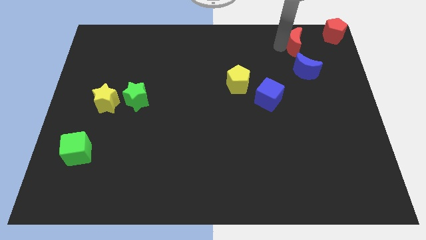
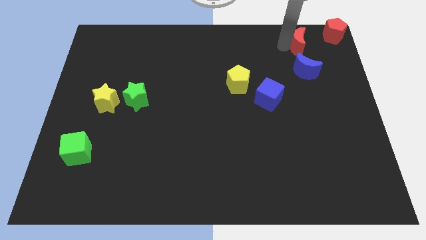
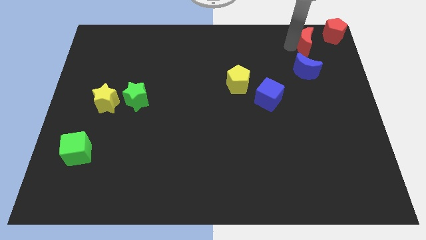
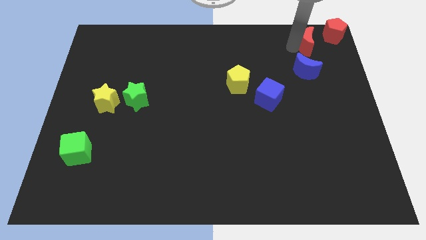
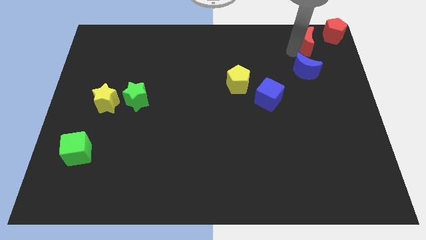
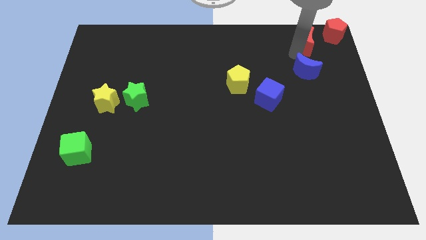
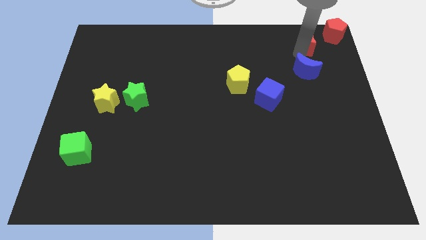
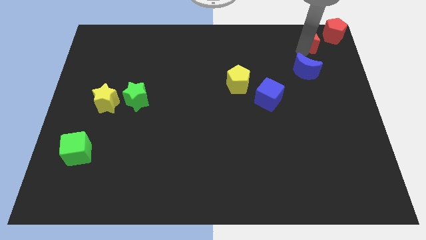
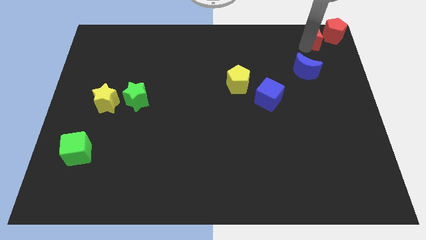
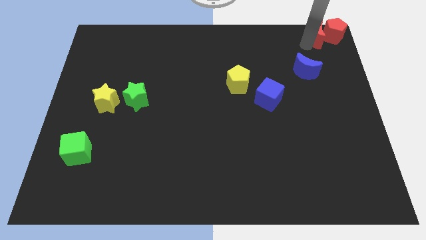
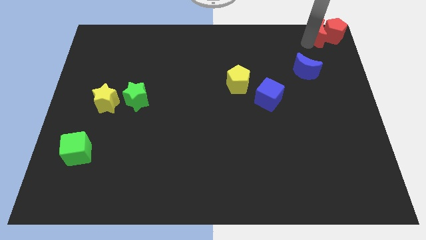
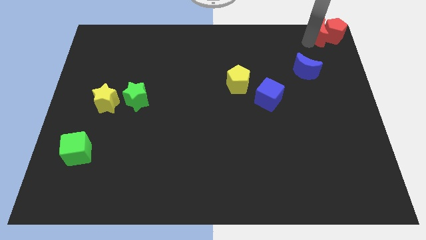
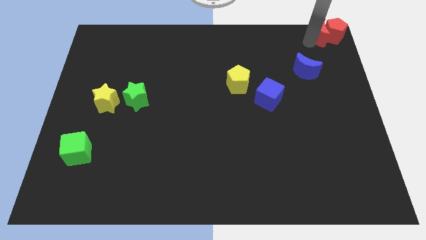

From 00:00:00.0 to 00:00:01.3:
push the red crescent into the red pentagon

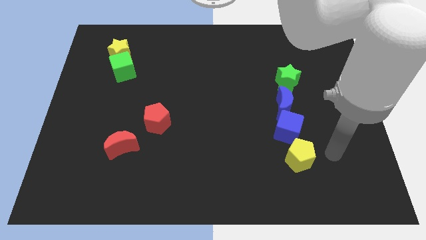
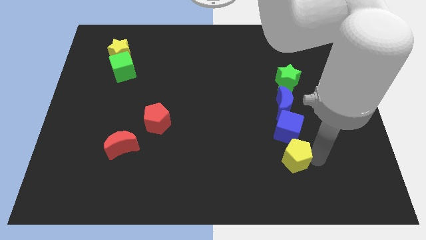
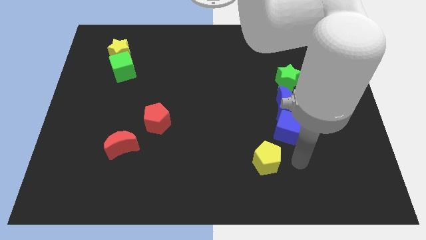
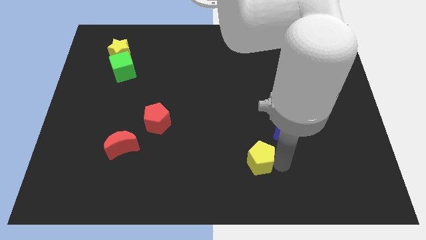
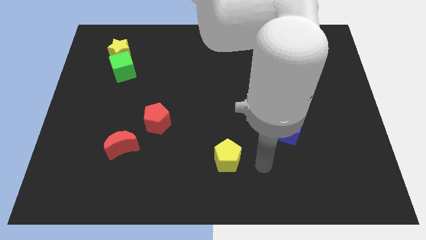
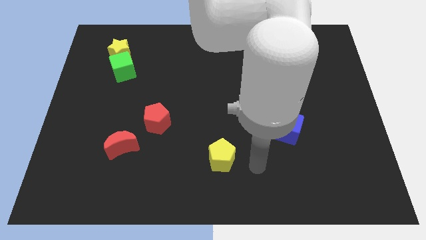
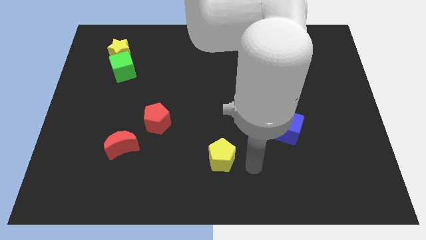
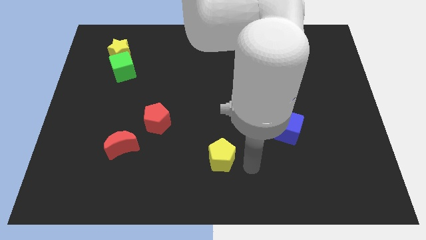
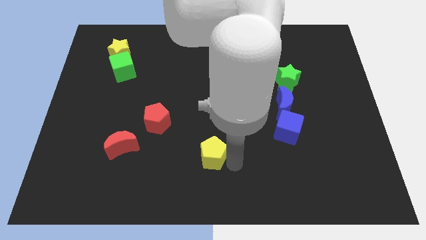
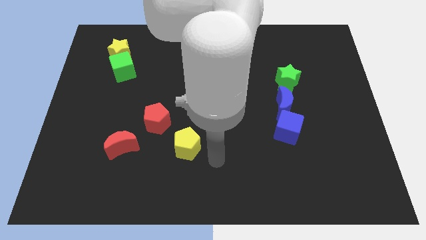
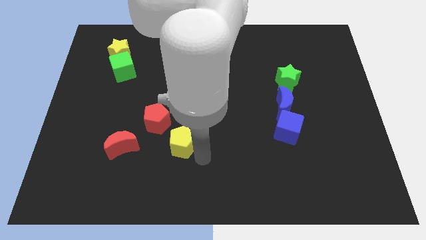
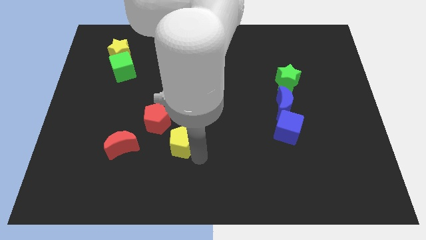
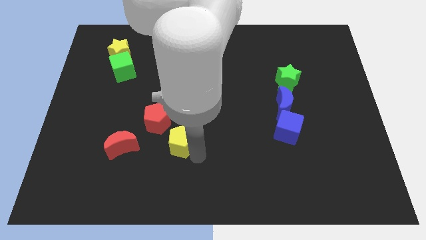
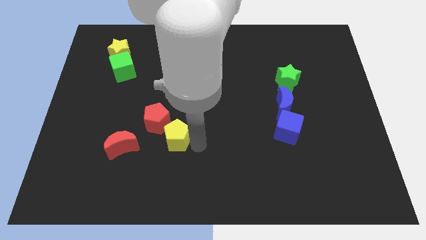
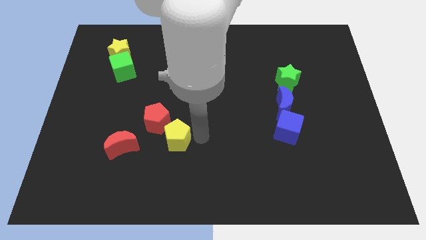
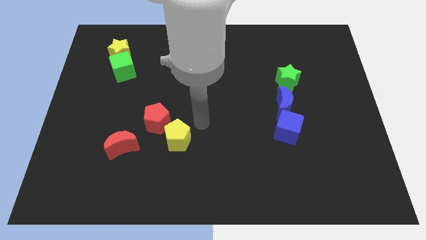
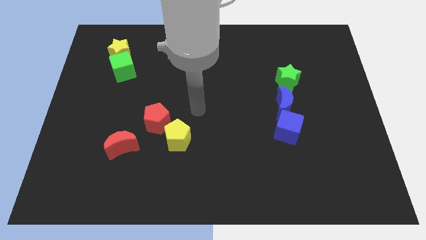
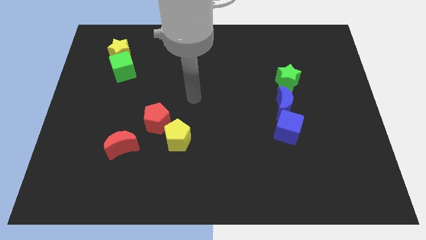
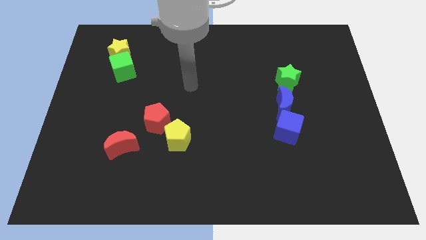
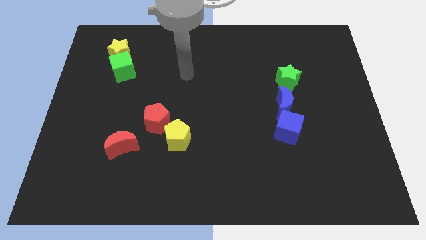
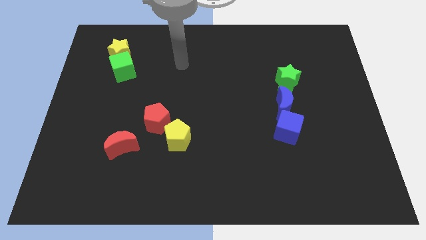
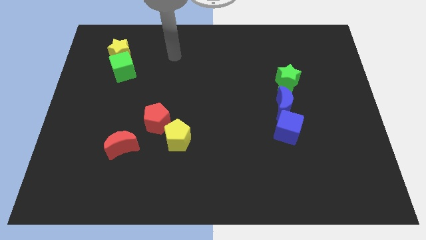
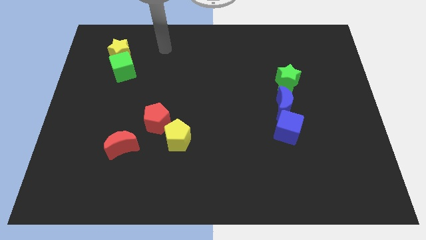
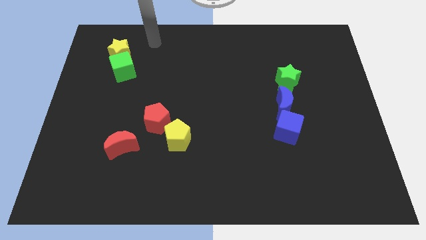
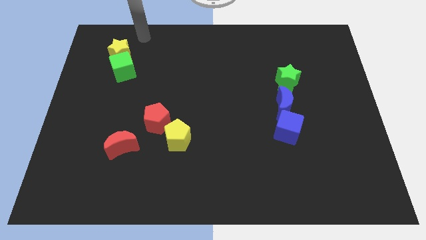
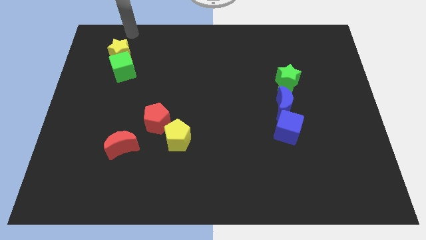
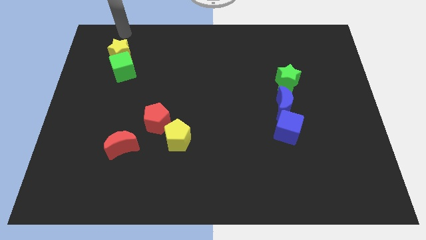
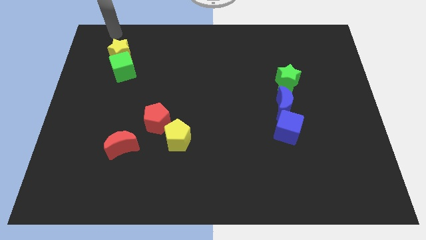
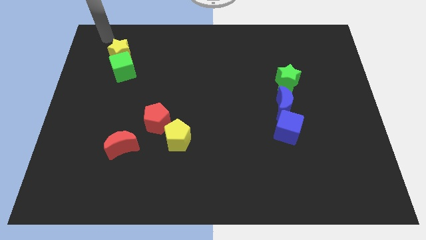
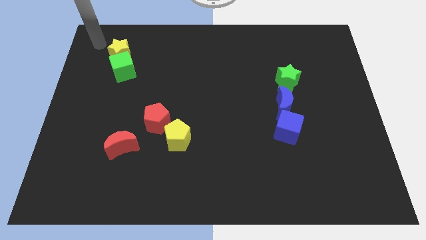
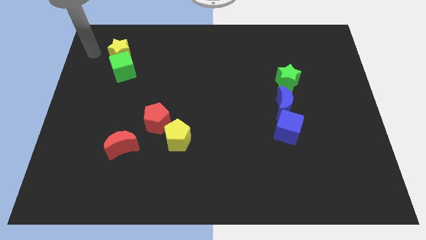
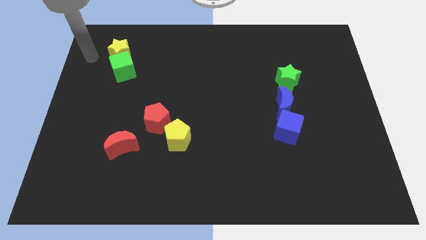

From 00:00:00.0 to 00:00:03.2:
move yellow pentagon to the right of red crescent

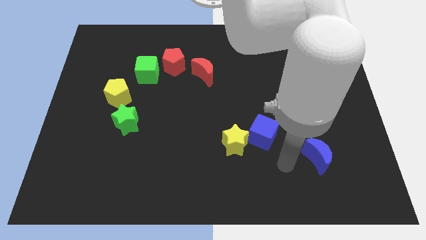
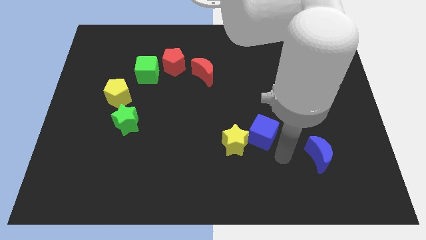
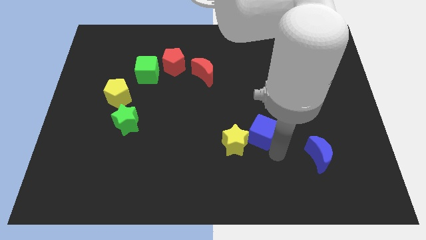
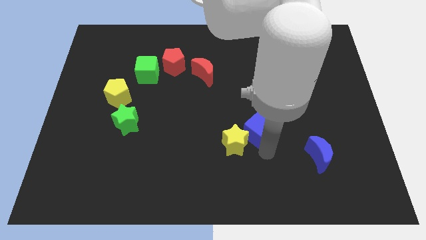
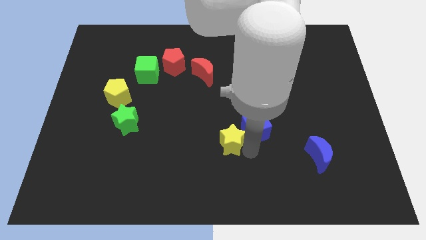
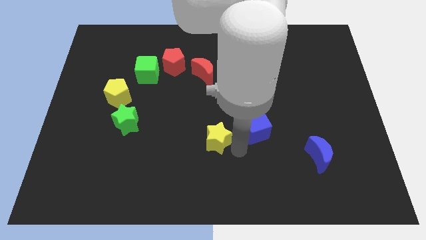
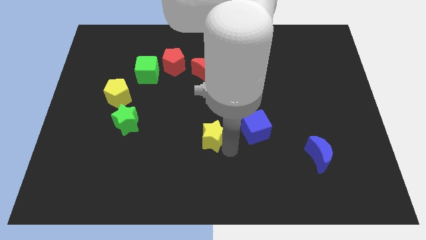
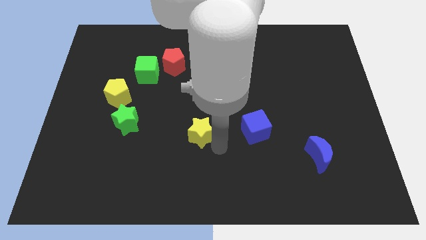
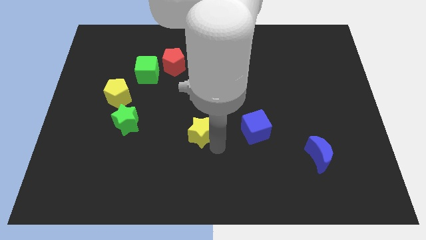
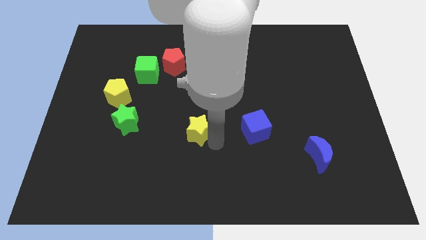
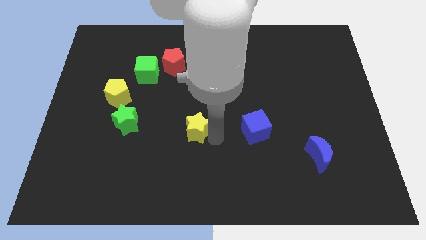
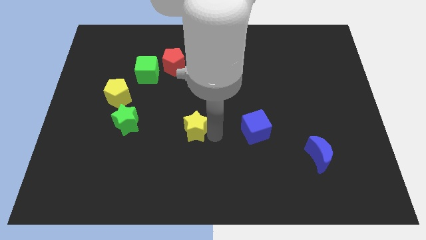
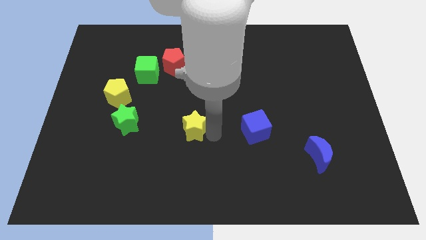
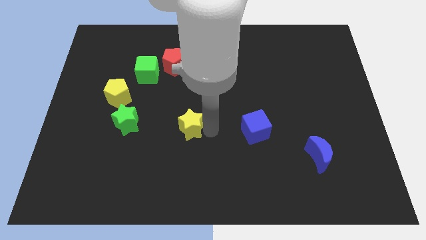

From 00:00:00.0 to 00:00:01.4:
move the yellow star away from the blue cube

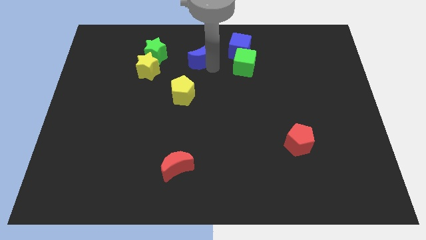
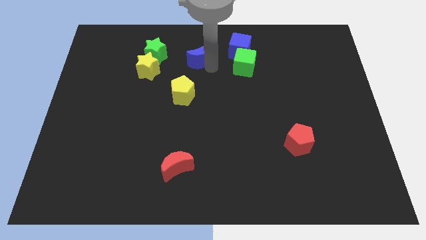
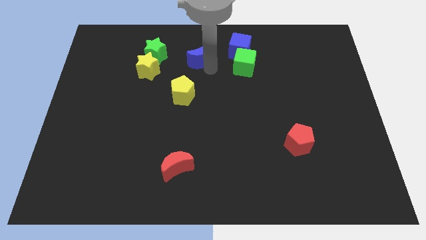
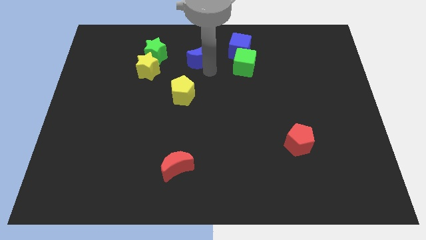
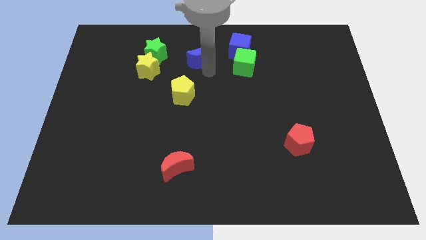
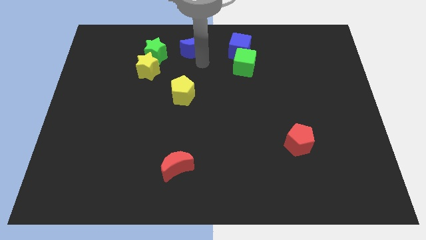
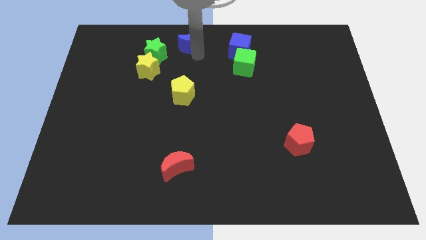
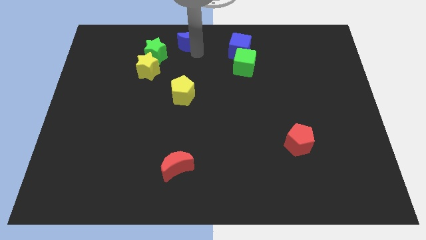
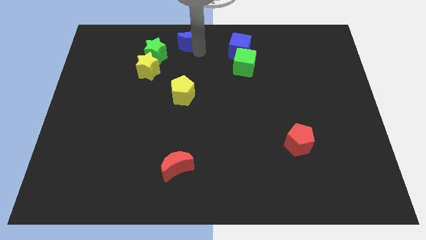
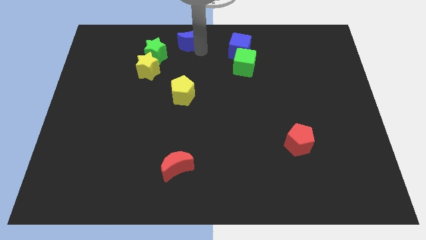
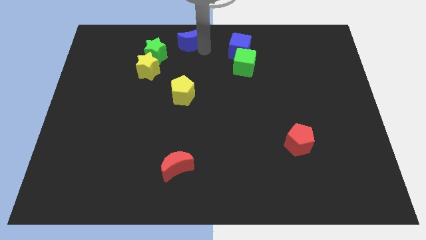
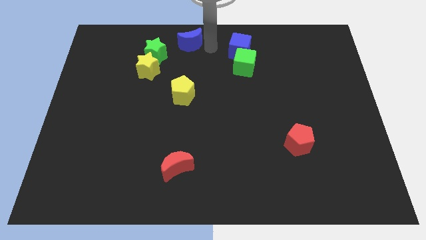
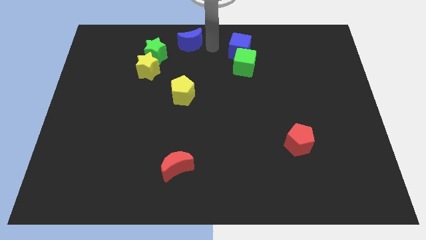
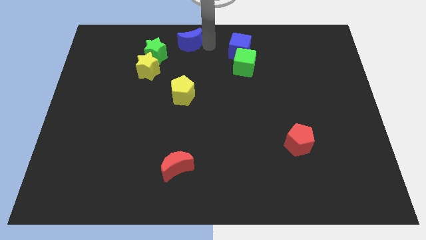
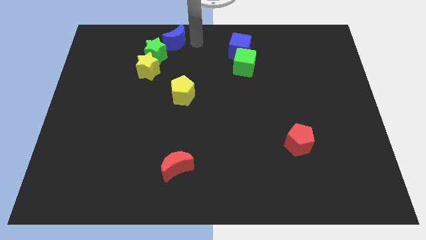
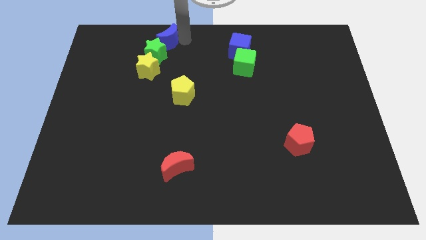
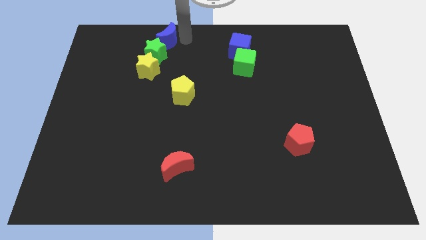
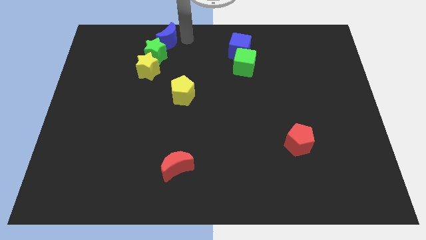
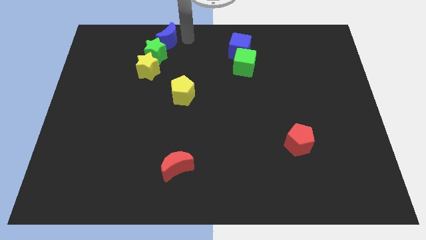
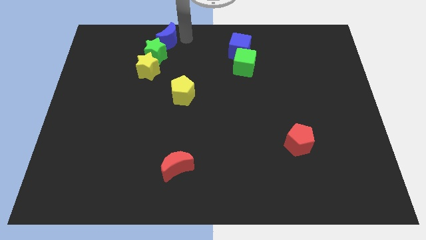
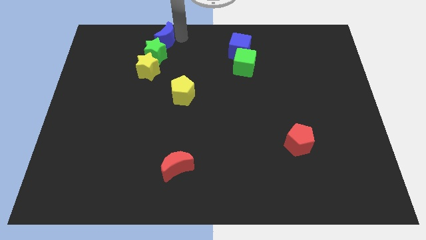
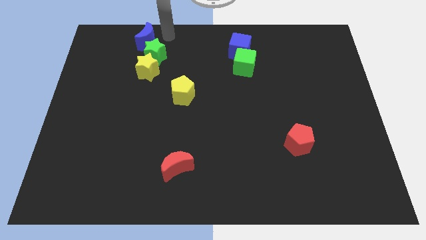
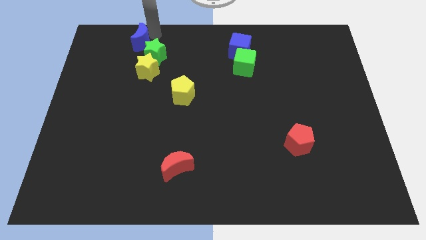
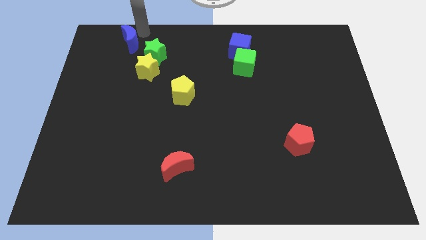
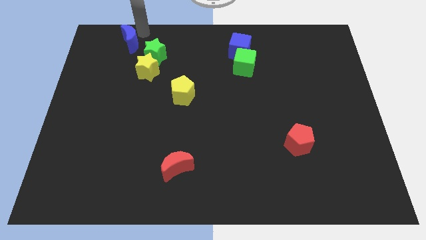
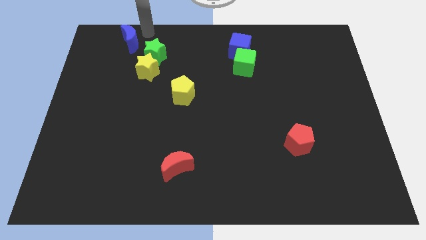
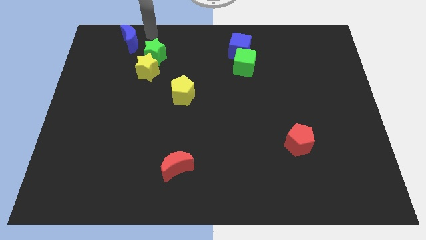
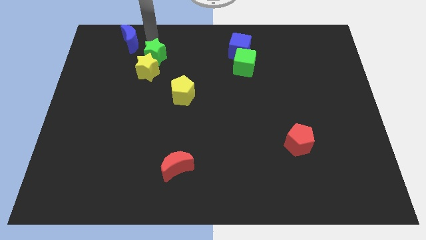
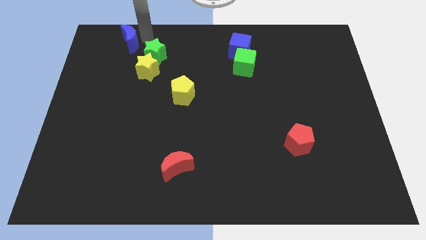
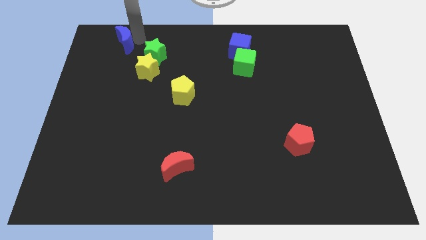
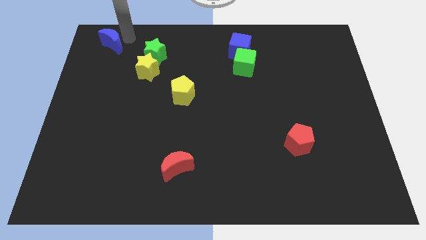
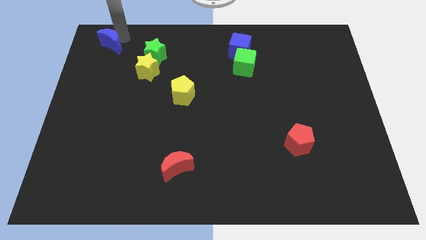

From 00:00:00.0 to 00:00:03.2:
move the blue crescent to the top left of green star

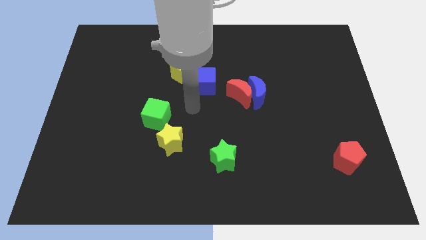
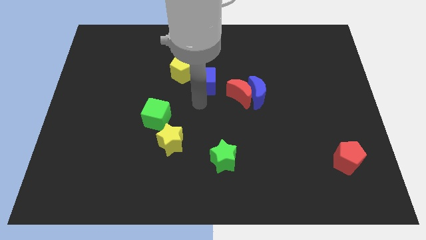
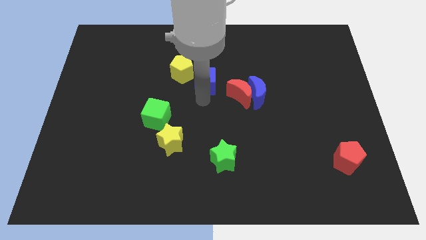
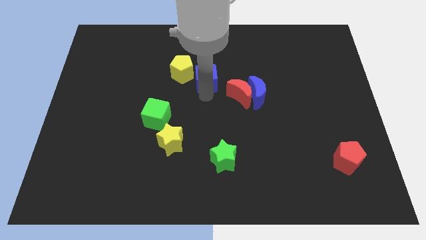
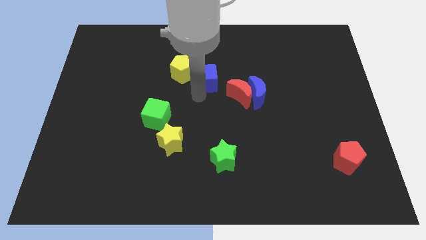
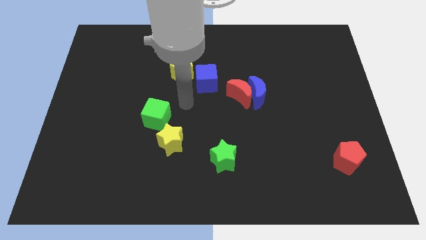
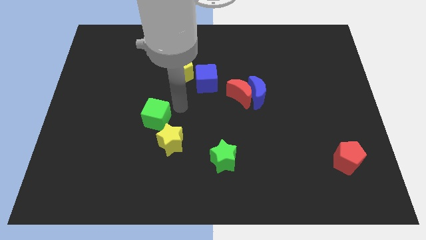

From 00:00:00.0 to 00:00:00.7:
slightly move the blue cube to the top of the board
